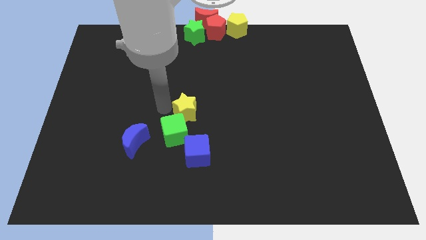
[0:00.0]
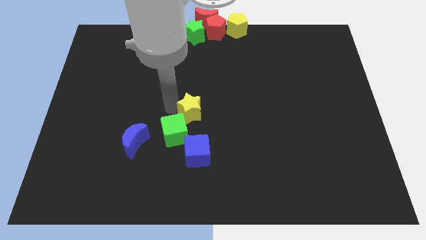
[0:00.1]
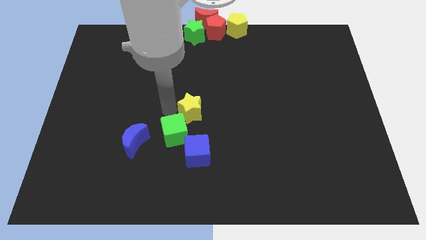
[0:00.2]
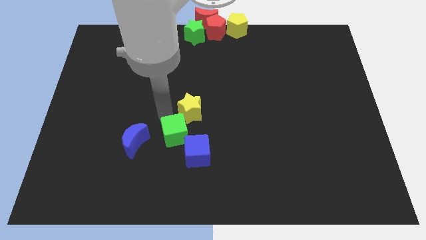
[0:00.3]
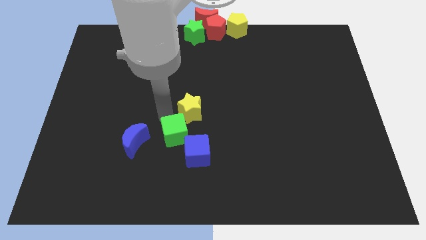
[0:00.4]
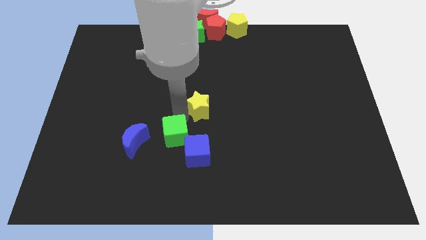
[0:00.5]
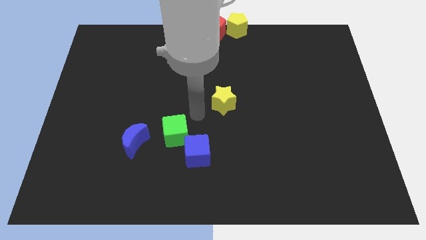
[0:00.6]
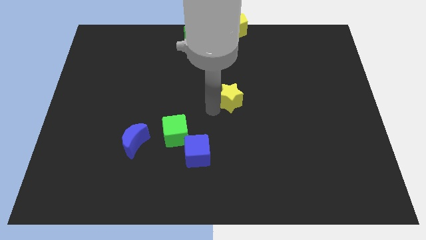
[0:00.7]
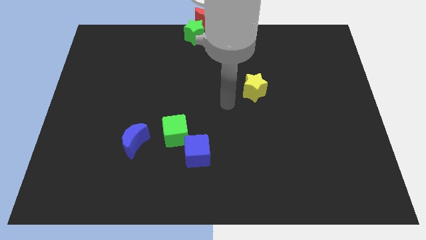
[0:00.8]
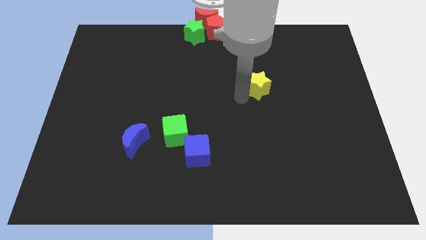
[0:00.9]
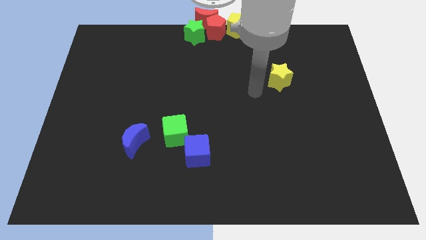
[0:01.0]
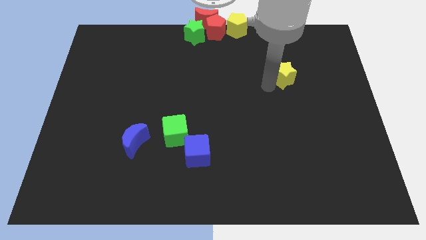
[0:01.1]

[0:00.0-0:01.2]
move yellow star slightly to right

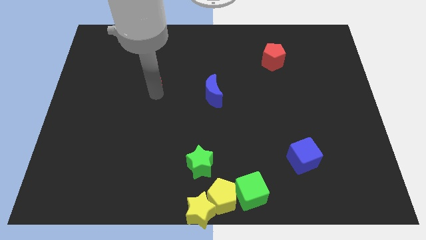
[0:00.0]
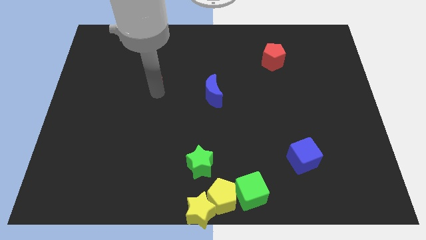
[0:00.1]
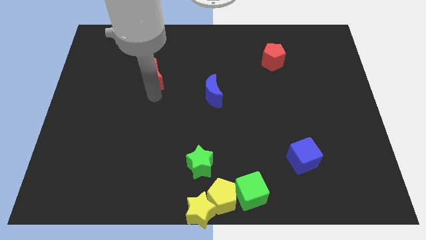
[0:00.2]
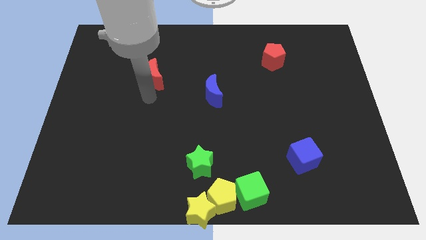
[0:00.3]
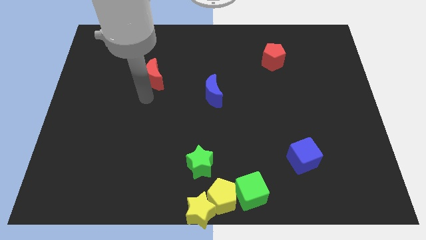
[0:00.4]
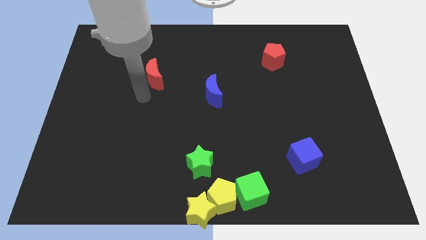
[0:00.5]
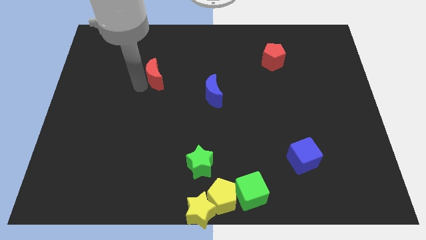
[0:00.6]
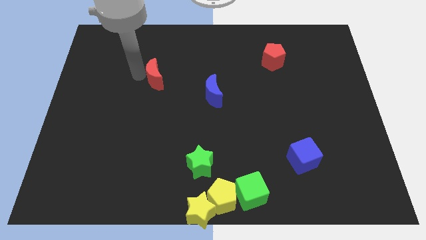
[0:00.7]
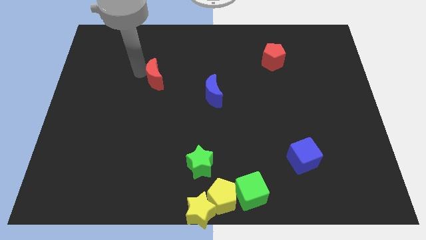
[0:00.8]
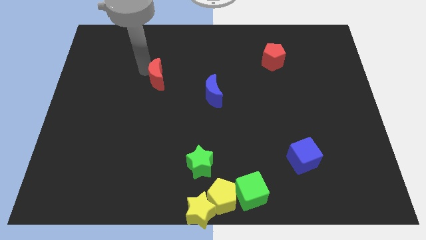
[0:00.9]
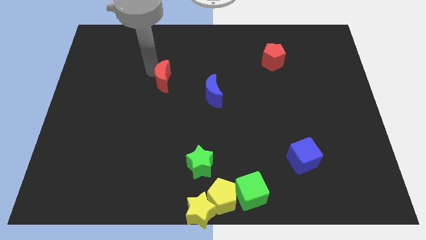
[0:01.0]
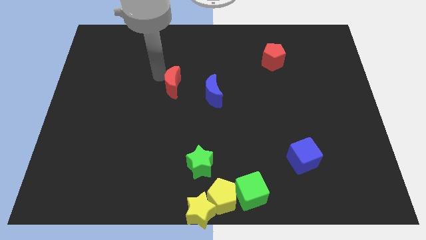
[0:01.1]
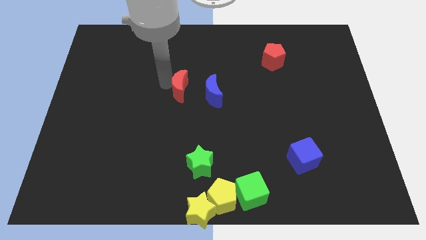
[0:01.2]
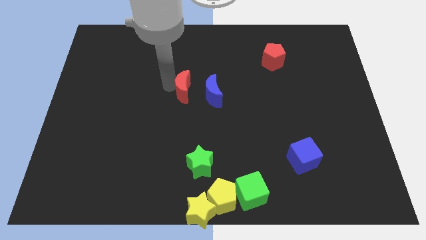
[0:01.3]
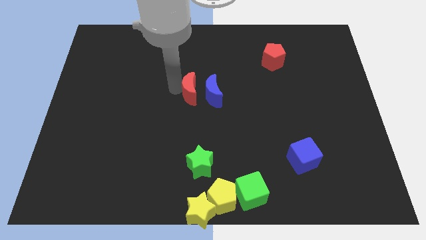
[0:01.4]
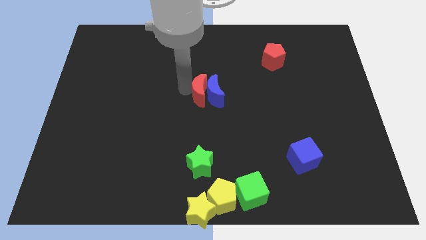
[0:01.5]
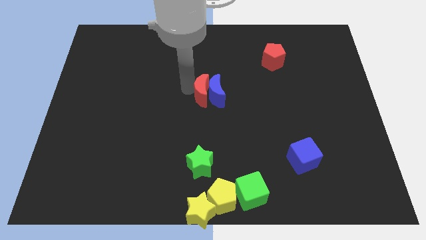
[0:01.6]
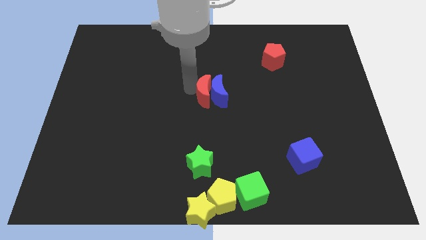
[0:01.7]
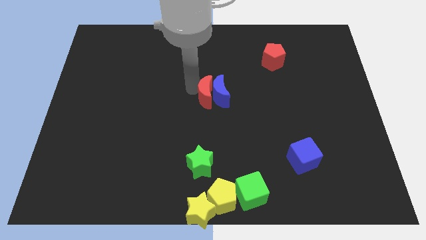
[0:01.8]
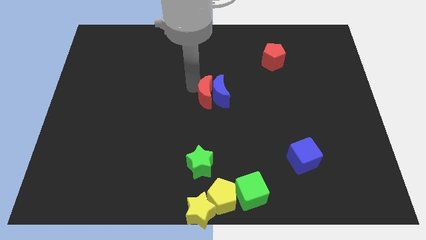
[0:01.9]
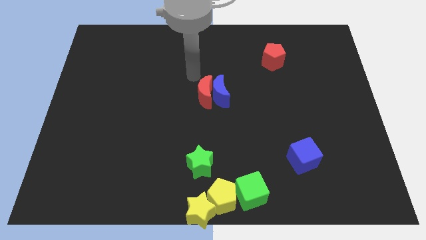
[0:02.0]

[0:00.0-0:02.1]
move the red crescent to the left of the blue crescent

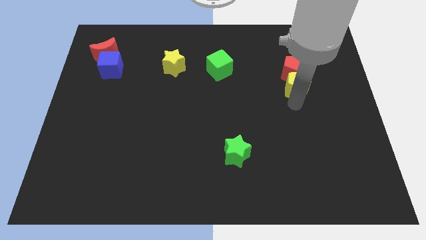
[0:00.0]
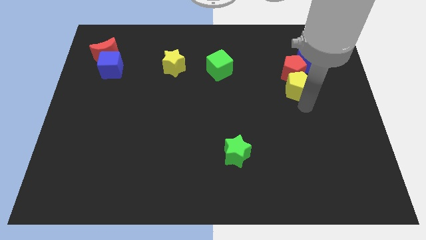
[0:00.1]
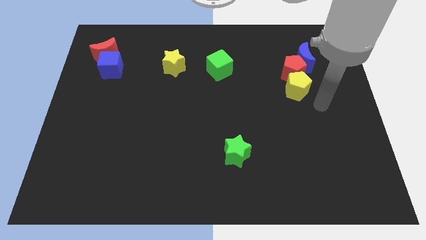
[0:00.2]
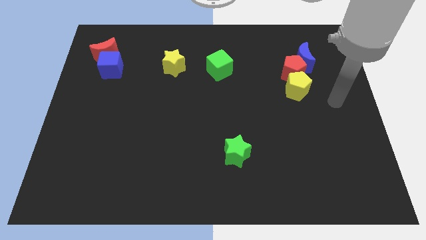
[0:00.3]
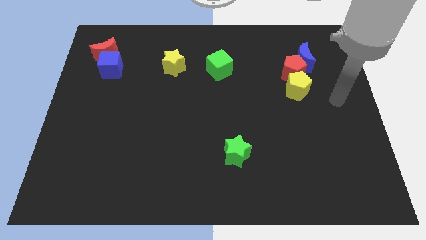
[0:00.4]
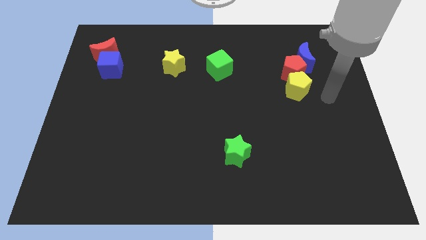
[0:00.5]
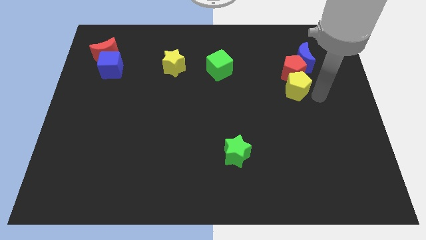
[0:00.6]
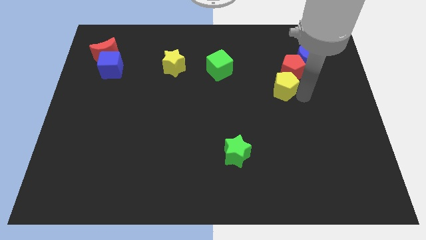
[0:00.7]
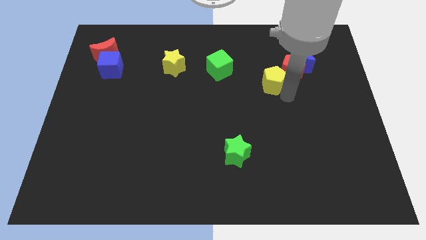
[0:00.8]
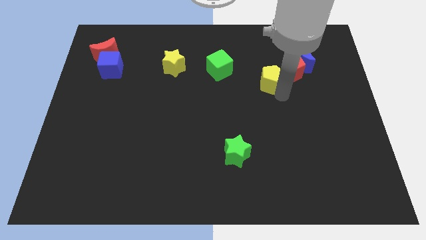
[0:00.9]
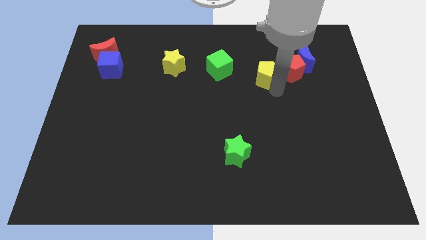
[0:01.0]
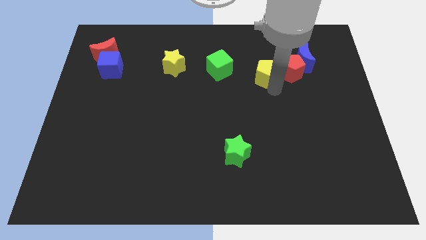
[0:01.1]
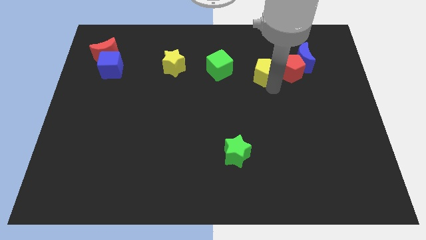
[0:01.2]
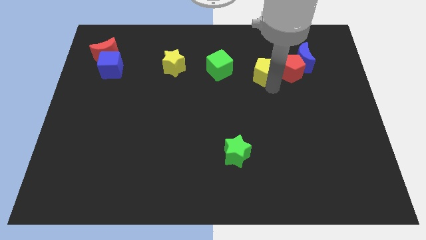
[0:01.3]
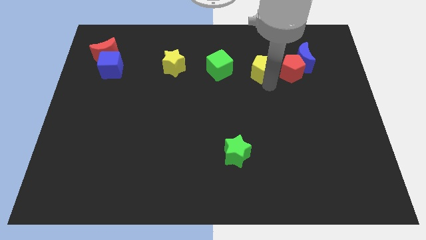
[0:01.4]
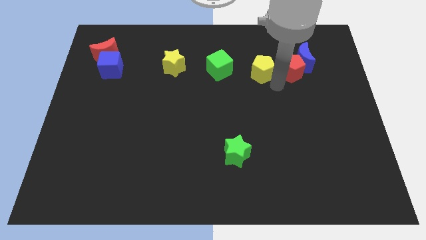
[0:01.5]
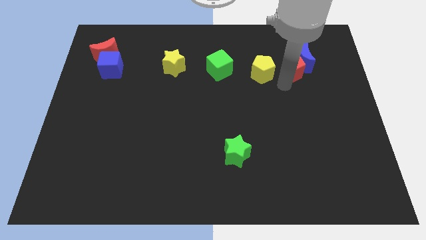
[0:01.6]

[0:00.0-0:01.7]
move the yellow pentagon to the left of the red pentagon

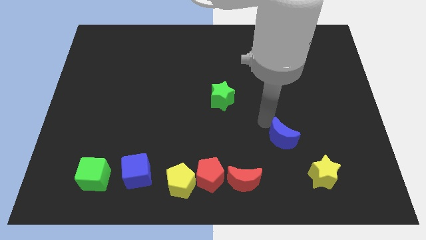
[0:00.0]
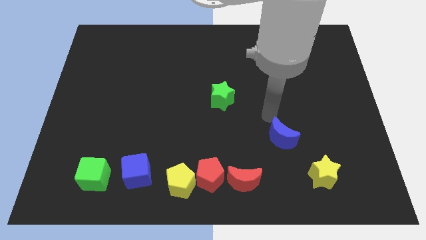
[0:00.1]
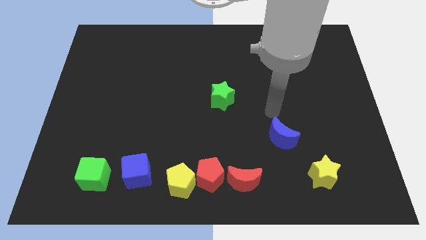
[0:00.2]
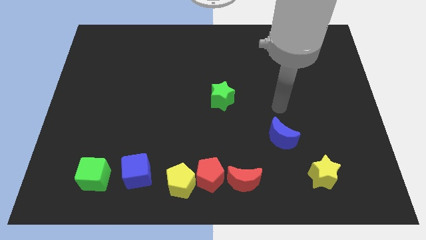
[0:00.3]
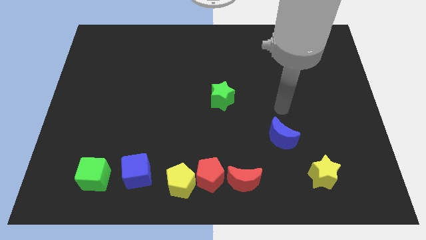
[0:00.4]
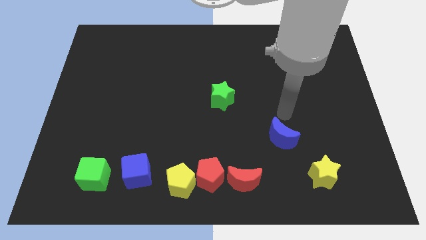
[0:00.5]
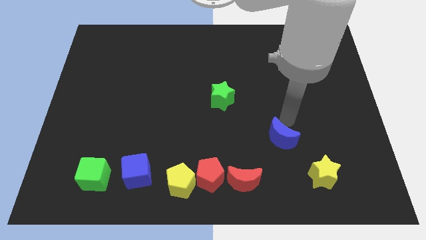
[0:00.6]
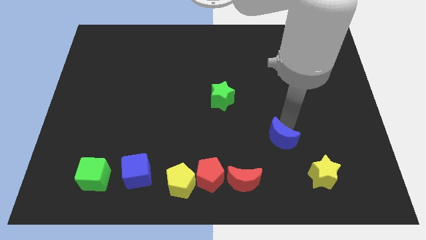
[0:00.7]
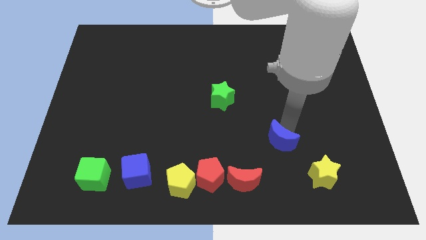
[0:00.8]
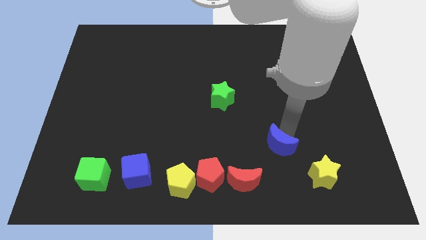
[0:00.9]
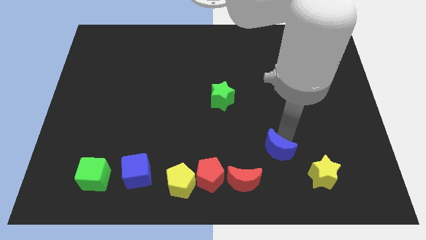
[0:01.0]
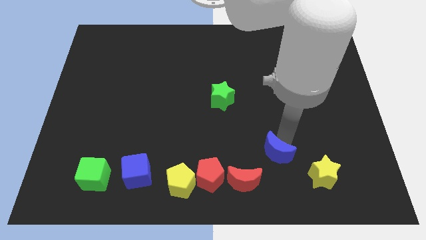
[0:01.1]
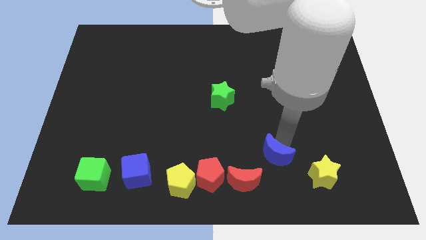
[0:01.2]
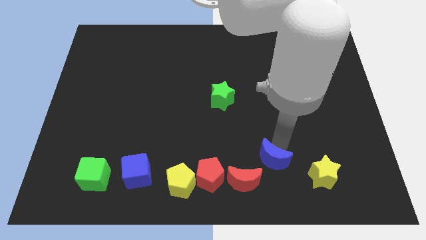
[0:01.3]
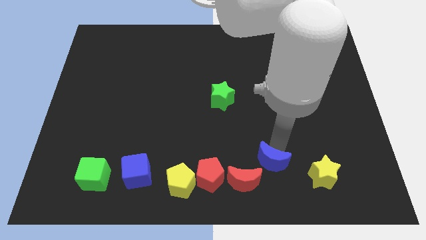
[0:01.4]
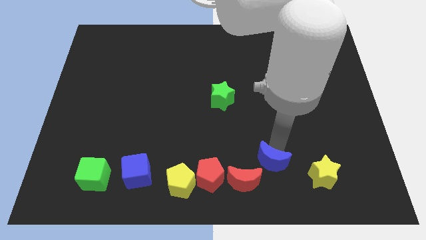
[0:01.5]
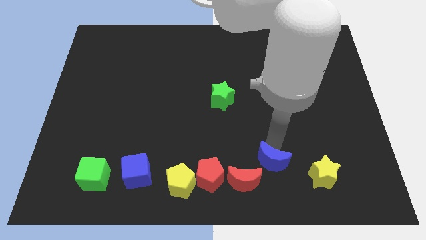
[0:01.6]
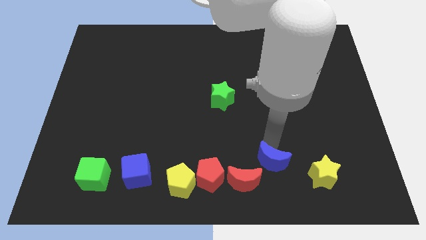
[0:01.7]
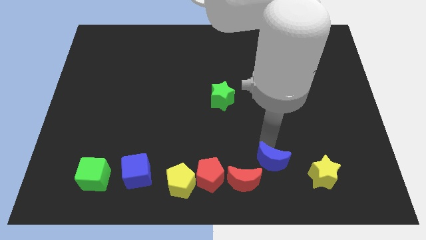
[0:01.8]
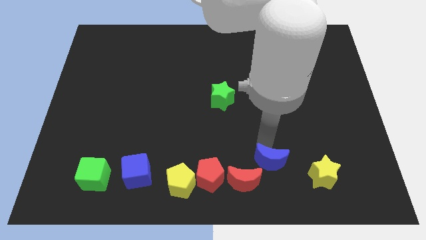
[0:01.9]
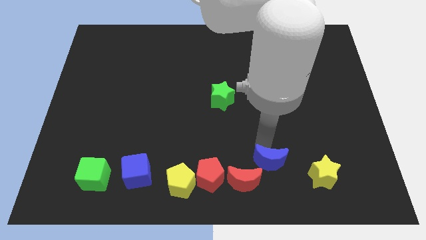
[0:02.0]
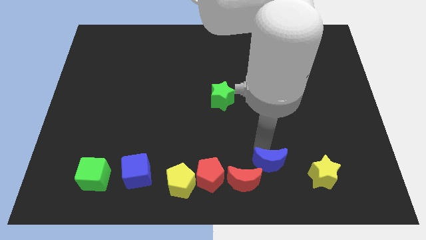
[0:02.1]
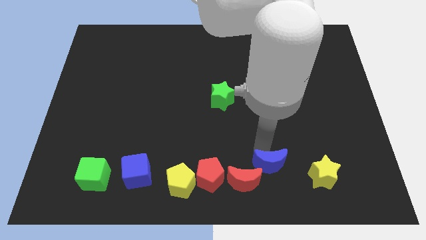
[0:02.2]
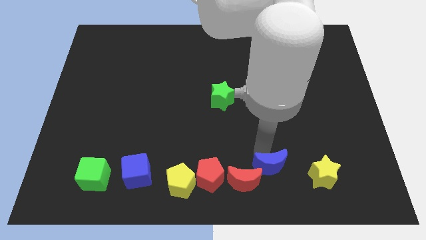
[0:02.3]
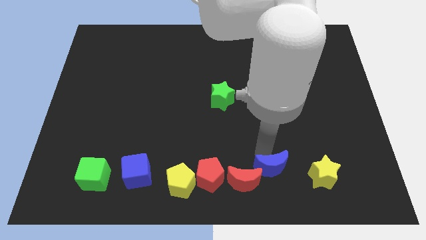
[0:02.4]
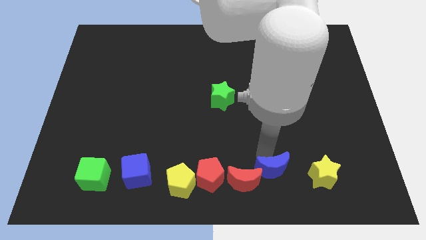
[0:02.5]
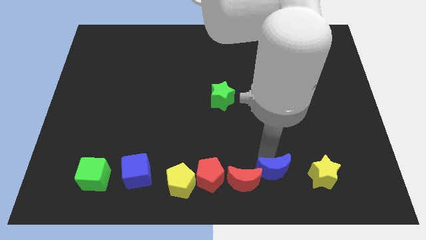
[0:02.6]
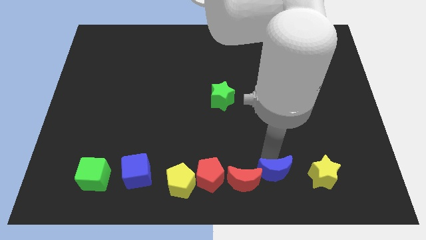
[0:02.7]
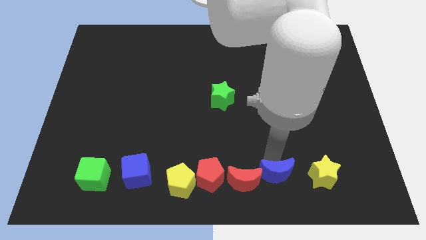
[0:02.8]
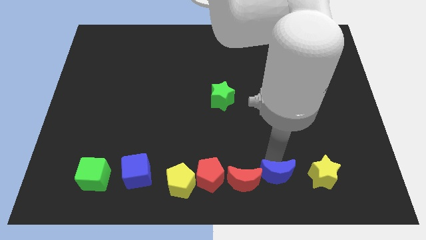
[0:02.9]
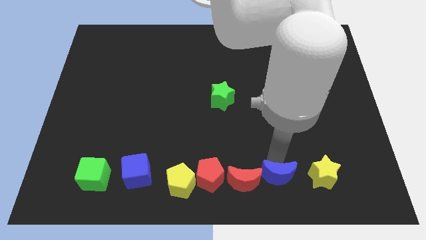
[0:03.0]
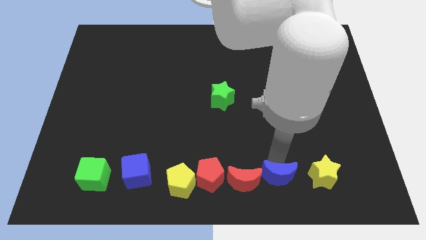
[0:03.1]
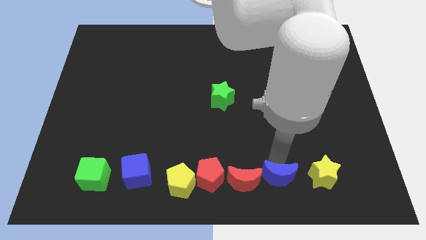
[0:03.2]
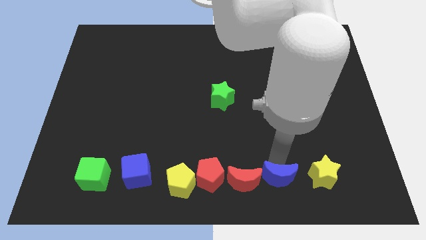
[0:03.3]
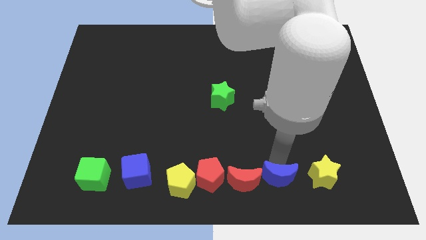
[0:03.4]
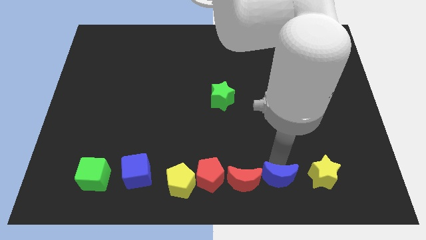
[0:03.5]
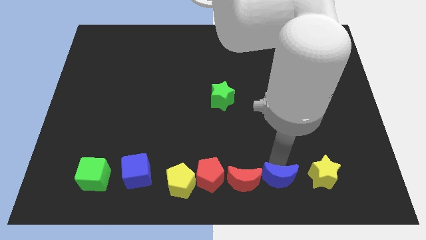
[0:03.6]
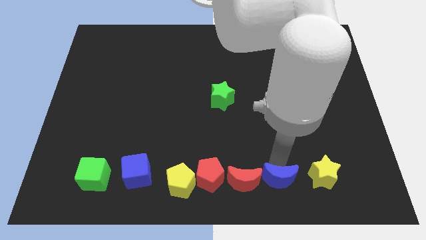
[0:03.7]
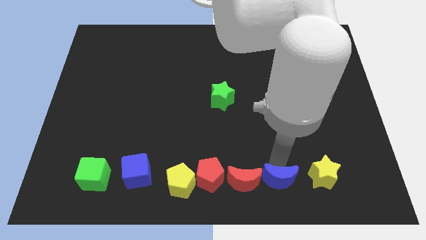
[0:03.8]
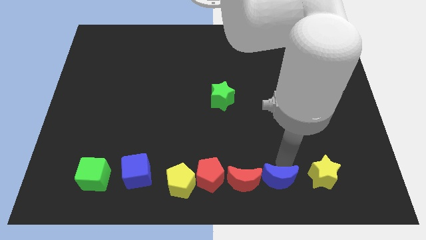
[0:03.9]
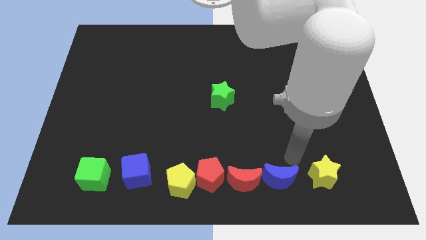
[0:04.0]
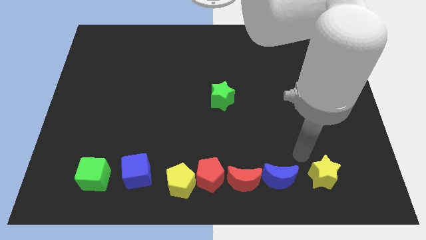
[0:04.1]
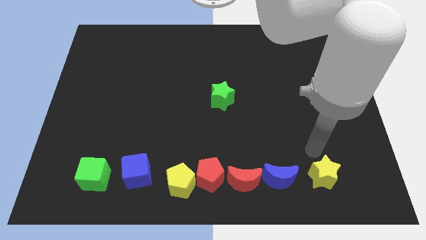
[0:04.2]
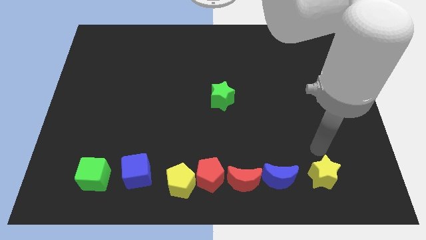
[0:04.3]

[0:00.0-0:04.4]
place the blue moon in between the red crescent and the yellow star
